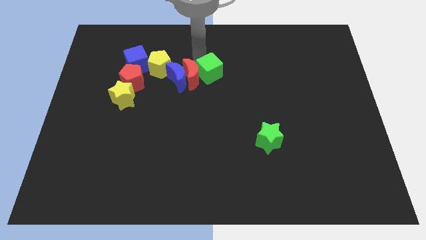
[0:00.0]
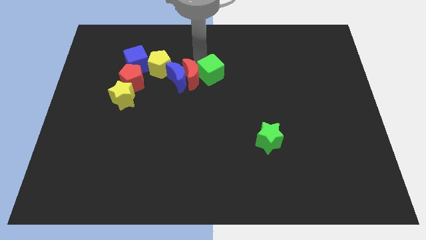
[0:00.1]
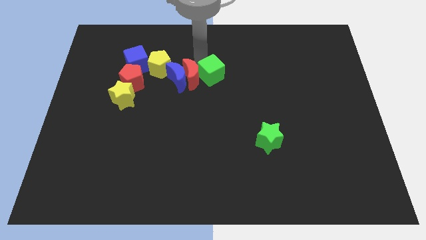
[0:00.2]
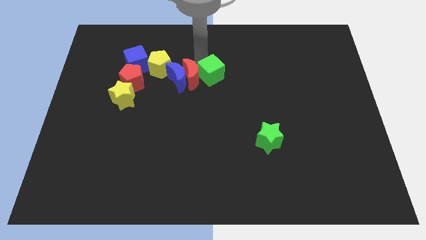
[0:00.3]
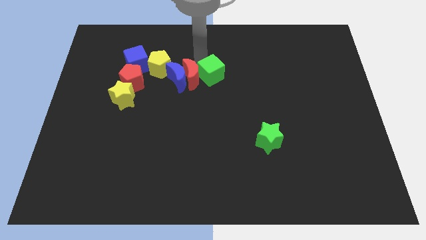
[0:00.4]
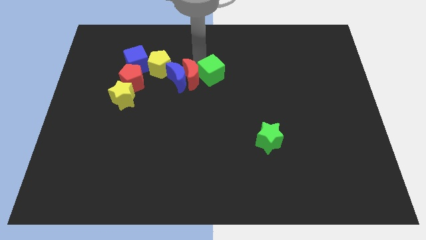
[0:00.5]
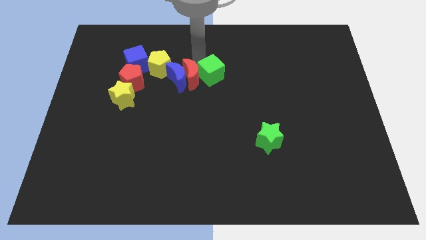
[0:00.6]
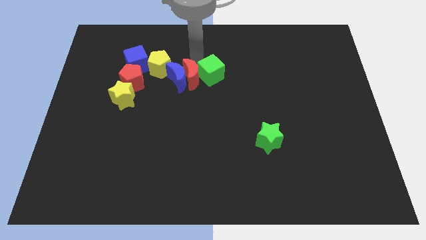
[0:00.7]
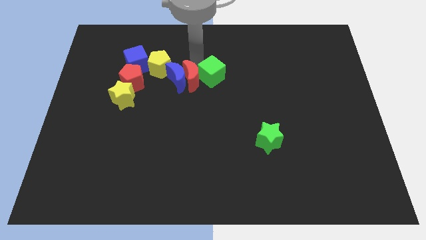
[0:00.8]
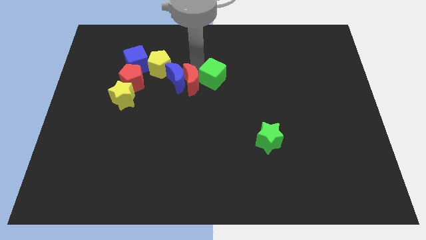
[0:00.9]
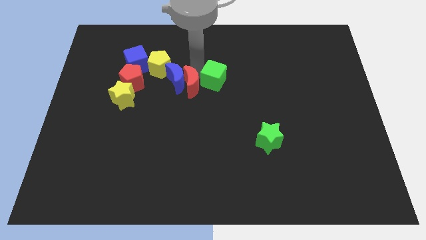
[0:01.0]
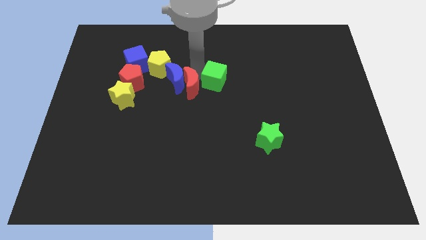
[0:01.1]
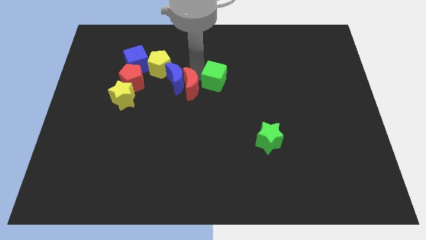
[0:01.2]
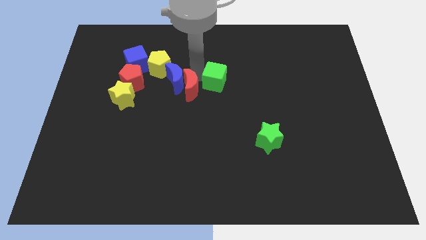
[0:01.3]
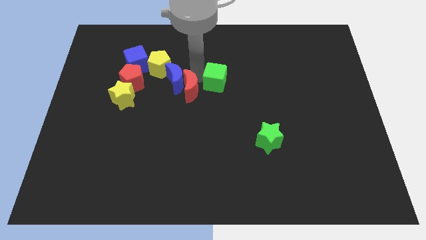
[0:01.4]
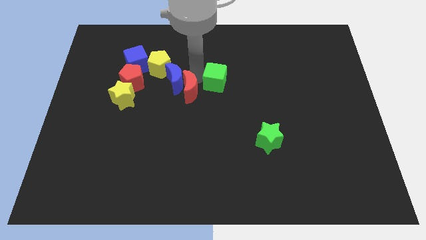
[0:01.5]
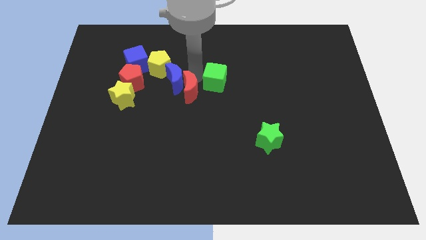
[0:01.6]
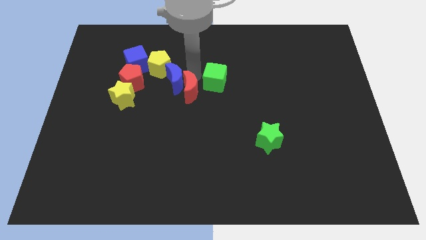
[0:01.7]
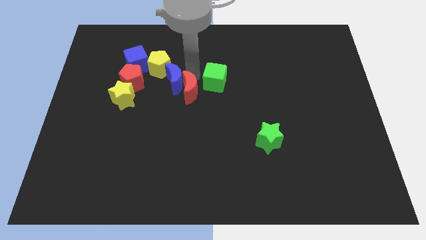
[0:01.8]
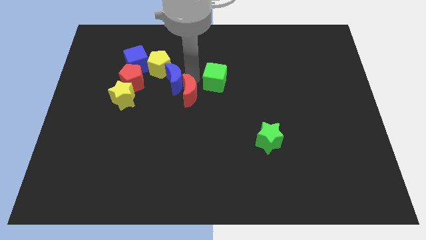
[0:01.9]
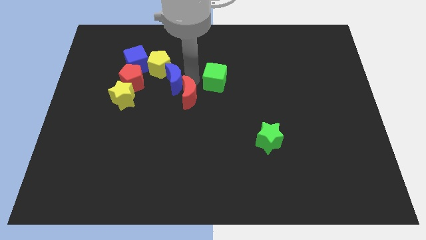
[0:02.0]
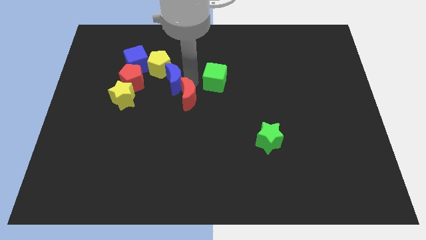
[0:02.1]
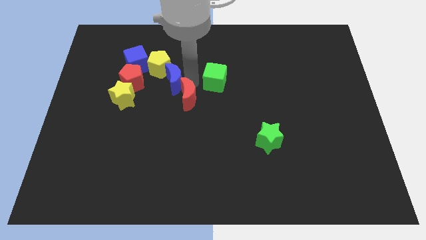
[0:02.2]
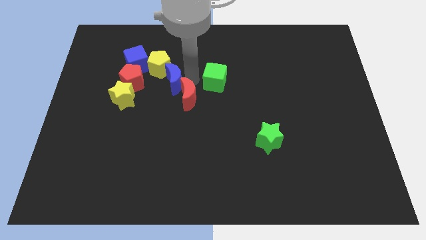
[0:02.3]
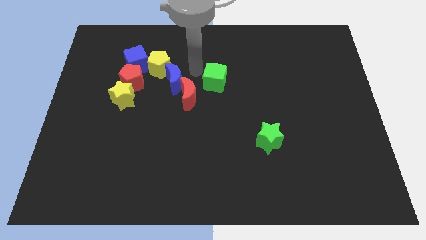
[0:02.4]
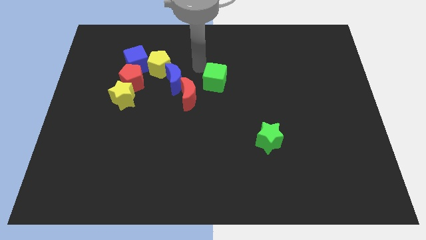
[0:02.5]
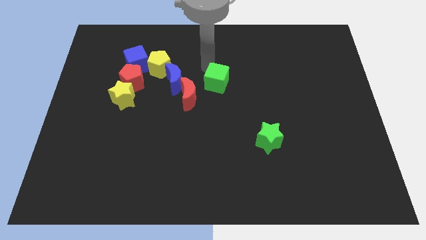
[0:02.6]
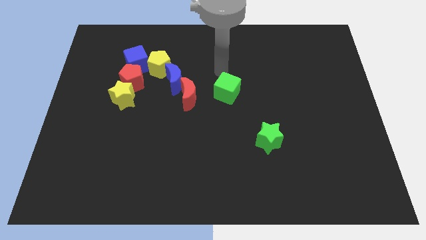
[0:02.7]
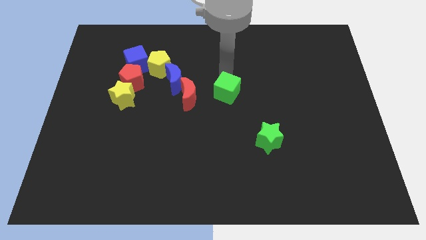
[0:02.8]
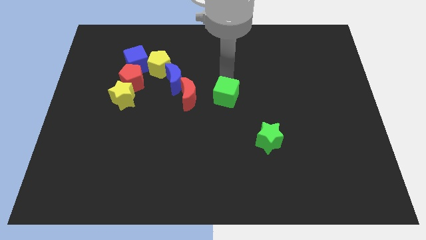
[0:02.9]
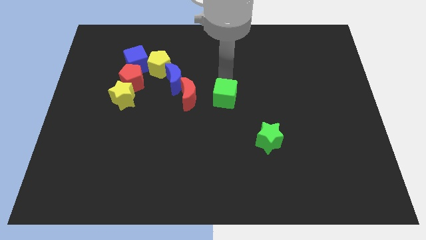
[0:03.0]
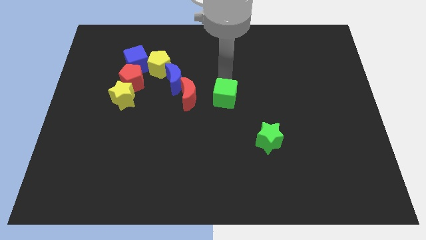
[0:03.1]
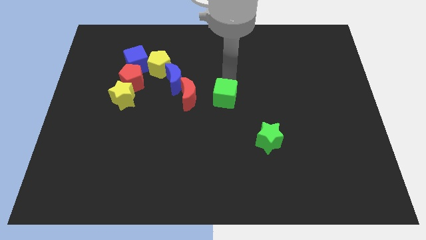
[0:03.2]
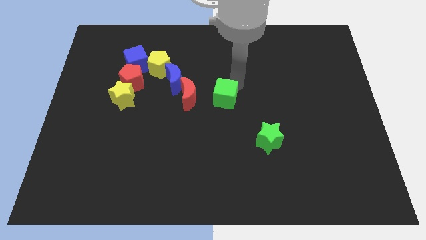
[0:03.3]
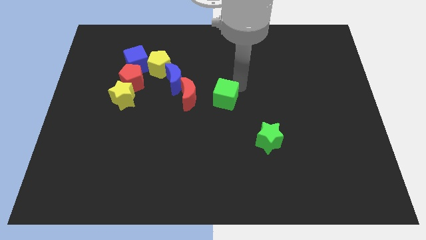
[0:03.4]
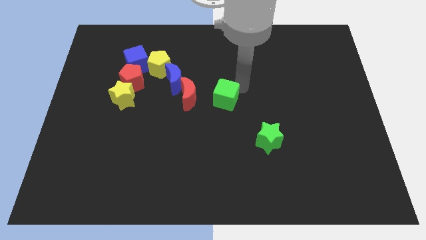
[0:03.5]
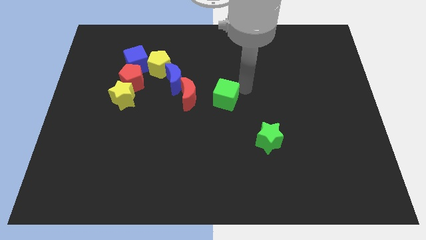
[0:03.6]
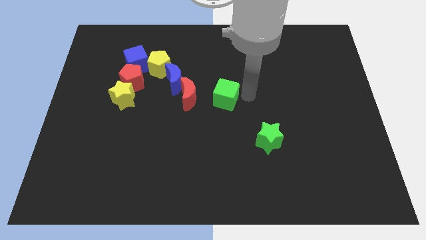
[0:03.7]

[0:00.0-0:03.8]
separate the red moon and green cube

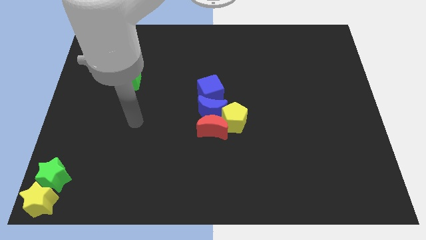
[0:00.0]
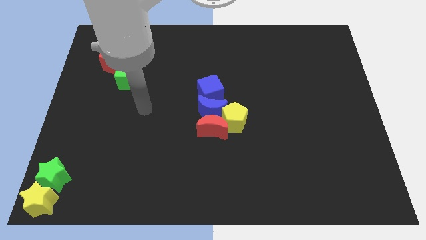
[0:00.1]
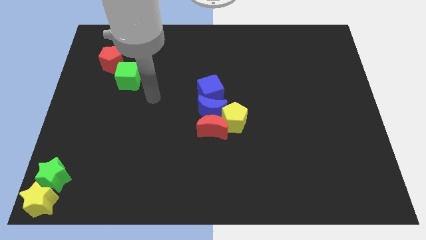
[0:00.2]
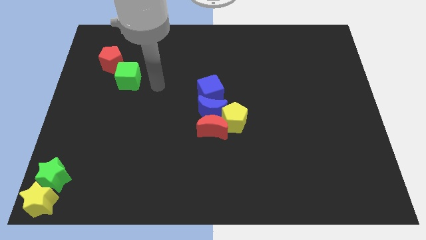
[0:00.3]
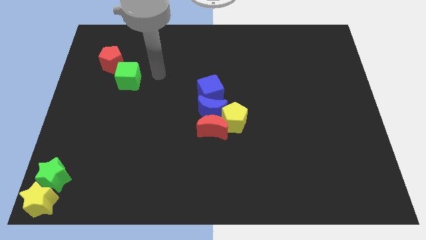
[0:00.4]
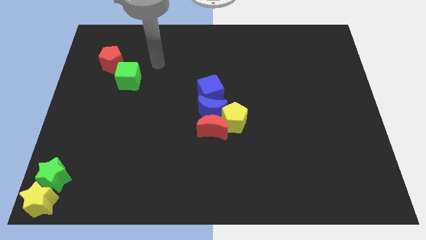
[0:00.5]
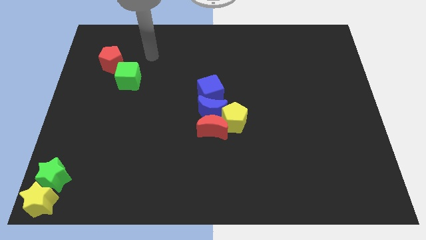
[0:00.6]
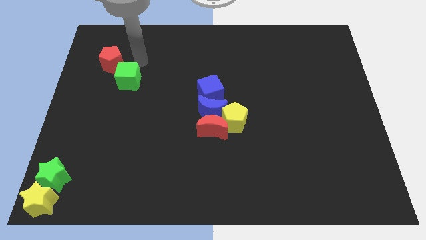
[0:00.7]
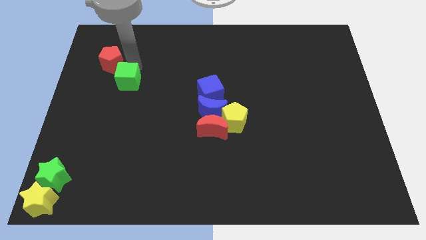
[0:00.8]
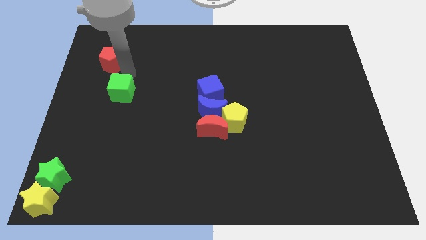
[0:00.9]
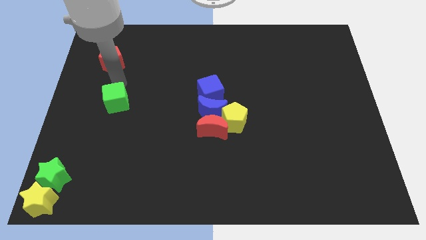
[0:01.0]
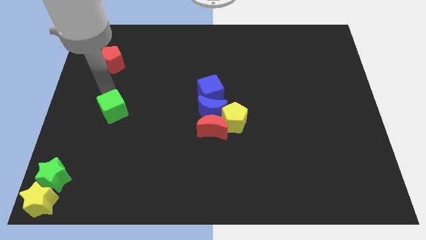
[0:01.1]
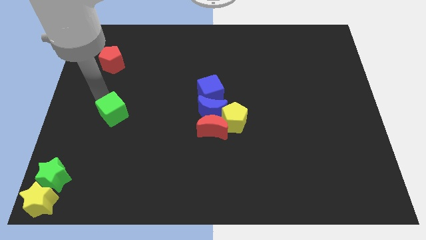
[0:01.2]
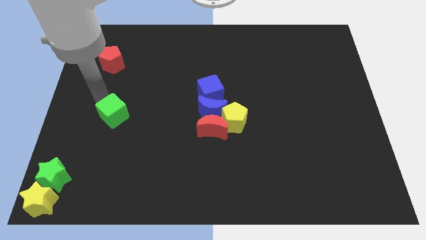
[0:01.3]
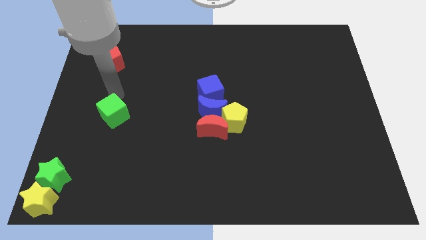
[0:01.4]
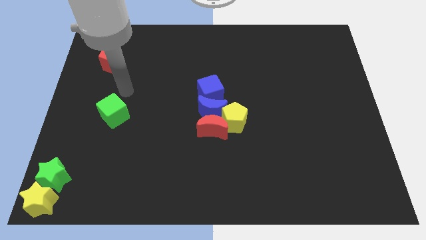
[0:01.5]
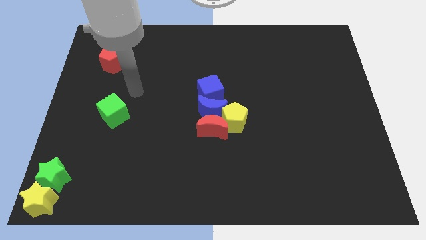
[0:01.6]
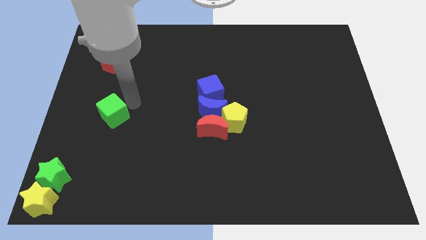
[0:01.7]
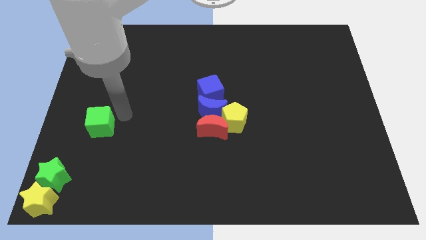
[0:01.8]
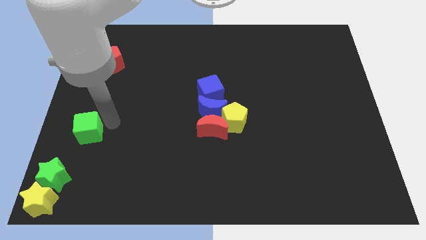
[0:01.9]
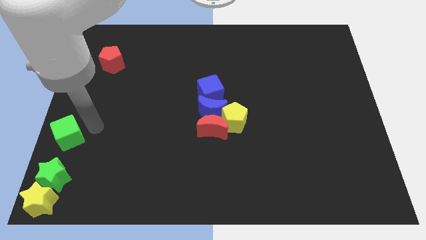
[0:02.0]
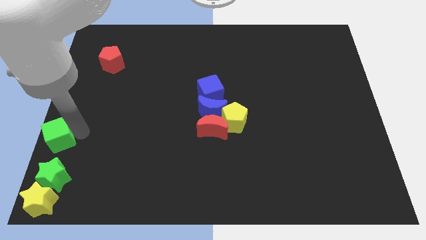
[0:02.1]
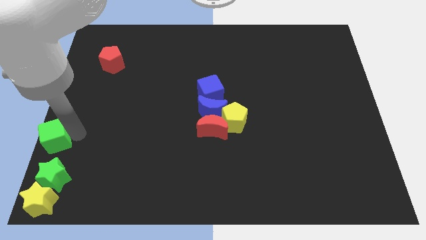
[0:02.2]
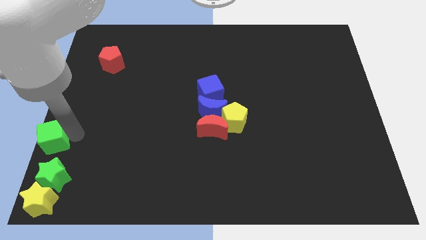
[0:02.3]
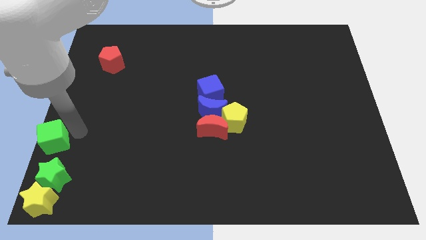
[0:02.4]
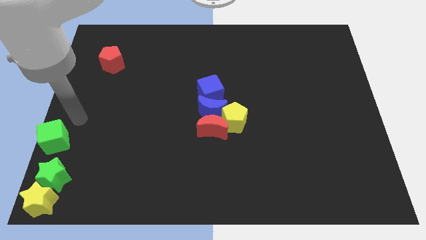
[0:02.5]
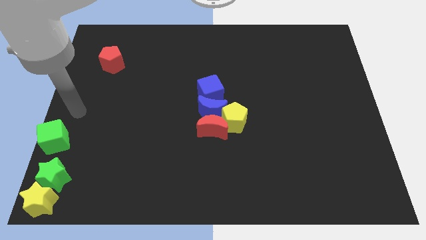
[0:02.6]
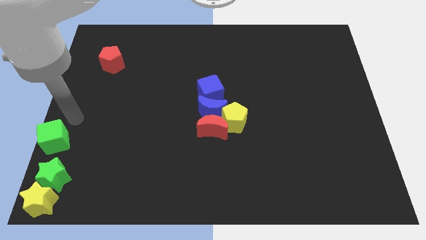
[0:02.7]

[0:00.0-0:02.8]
separate the green cube to the top of green star

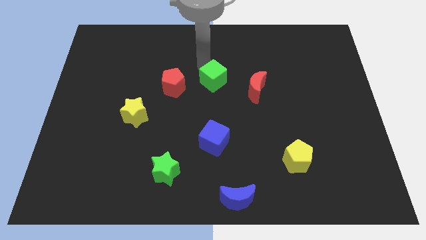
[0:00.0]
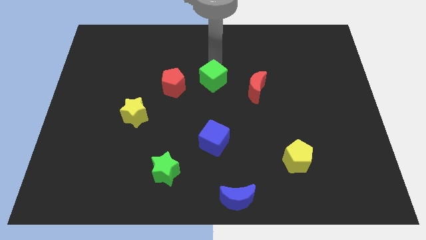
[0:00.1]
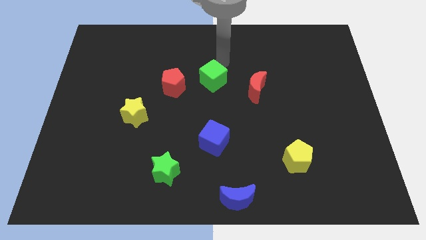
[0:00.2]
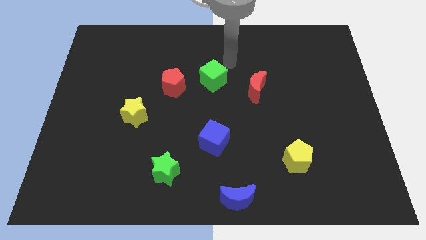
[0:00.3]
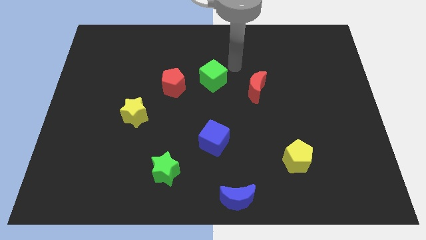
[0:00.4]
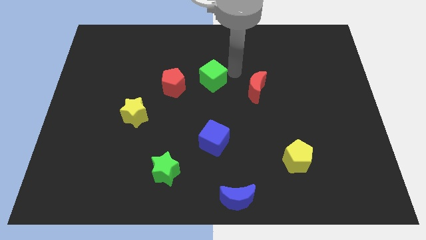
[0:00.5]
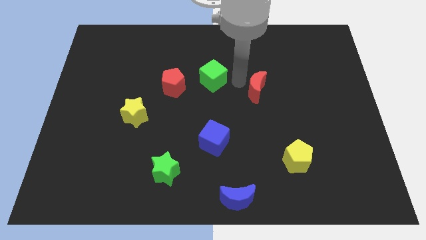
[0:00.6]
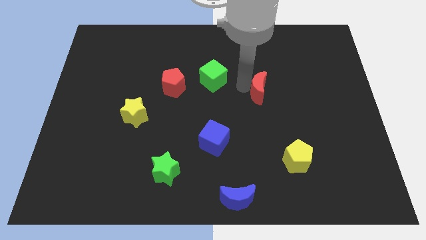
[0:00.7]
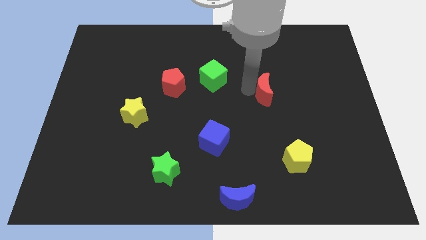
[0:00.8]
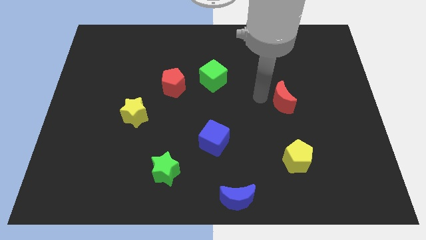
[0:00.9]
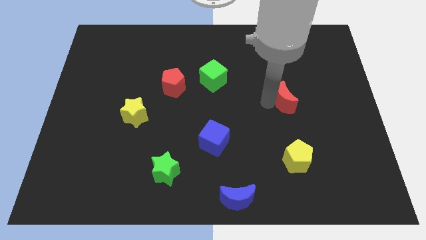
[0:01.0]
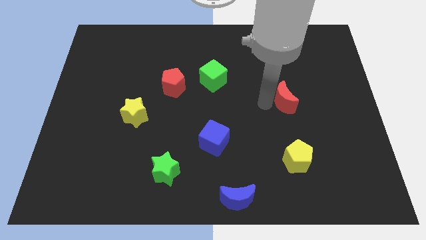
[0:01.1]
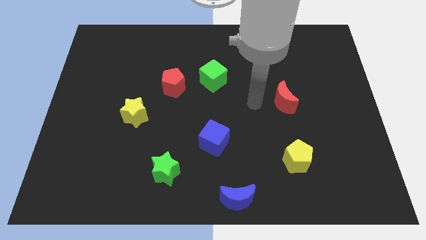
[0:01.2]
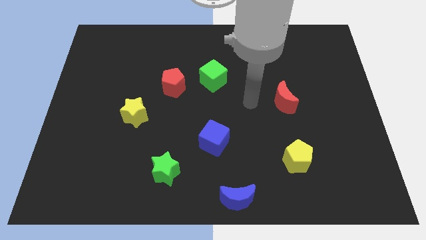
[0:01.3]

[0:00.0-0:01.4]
place the red moon diagonal to the blue cube

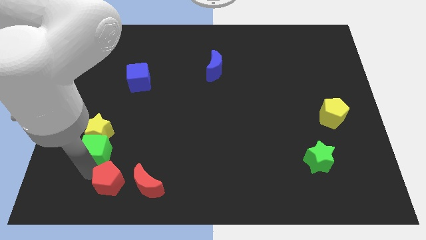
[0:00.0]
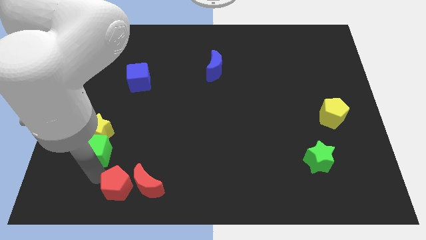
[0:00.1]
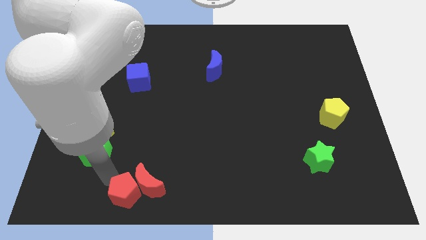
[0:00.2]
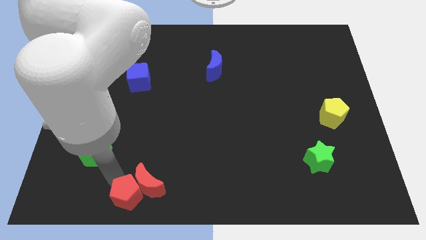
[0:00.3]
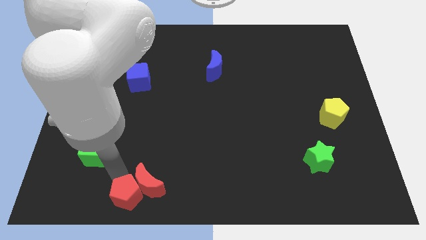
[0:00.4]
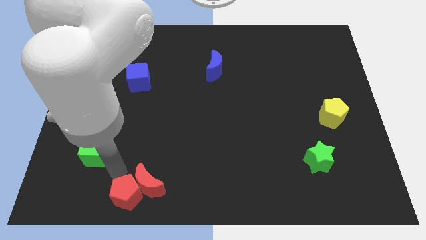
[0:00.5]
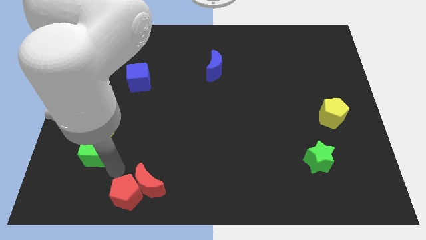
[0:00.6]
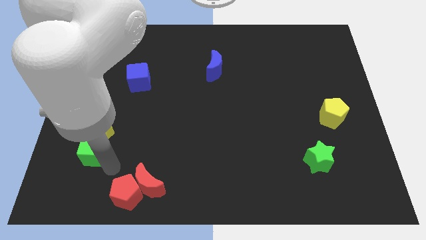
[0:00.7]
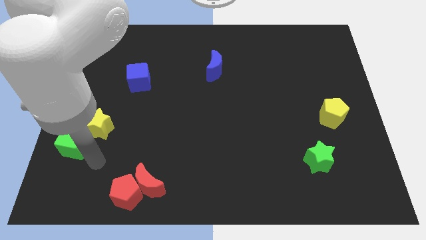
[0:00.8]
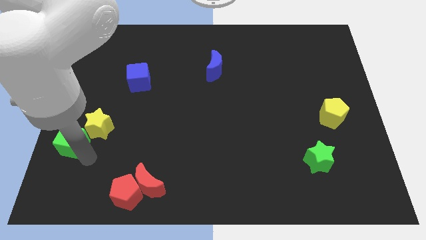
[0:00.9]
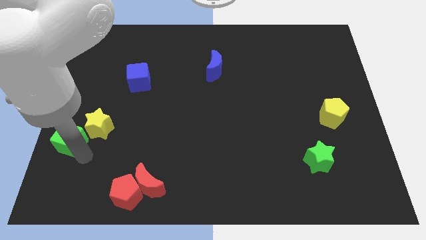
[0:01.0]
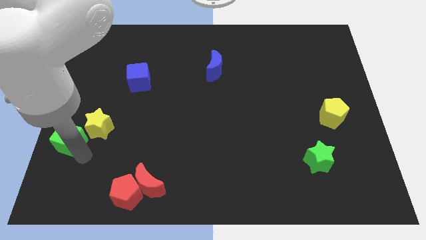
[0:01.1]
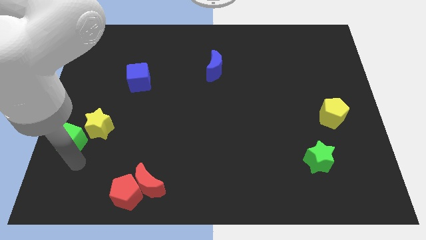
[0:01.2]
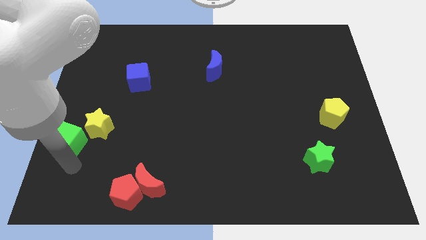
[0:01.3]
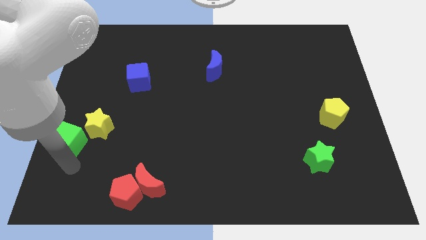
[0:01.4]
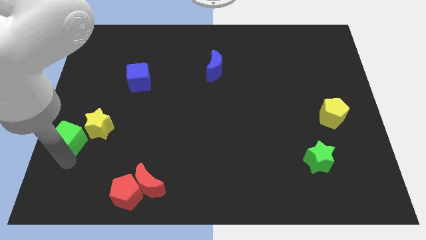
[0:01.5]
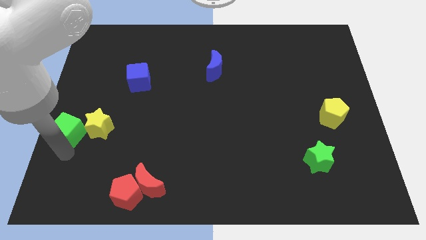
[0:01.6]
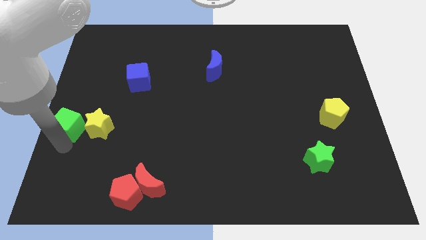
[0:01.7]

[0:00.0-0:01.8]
place the green cube to the left of the yellow star
